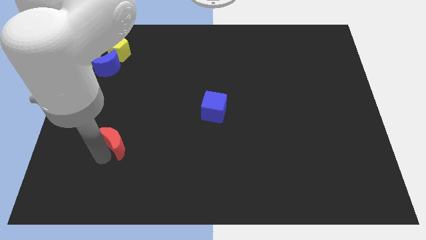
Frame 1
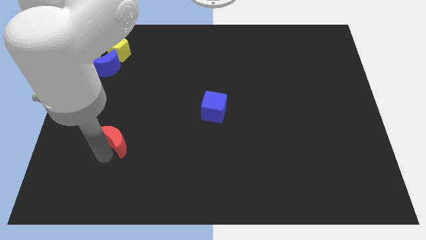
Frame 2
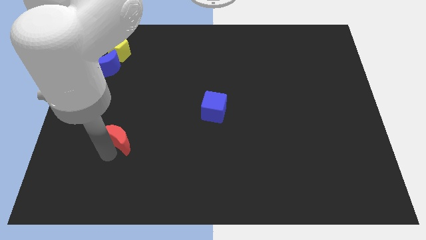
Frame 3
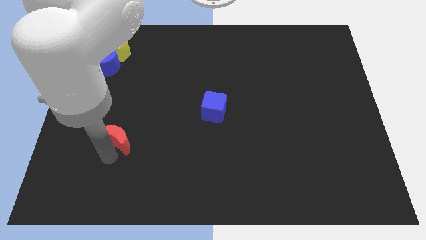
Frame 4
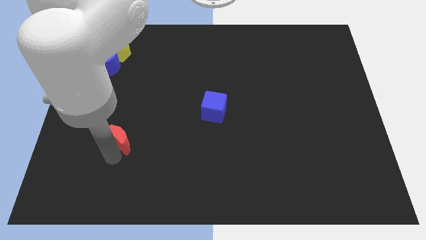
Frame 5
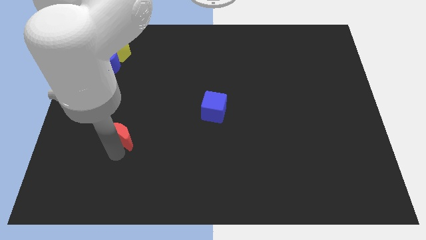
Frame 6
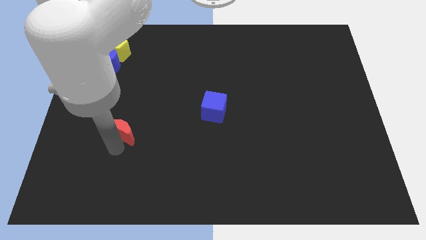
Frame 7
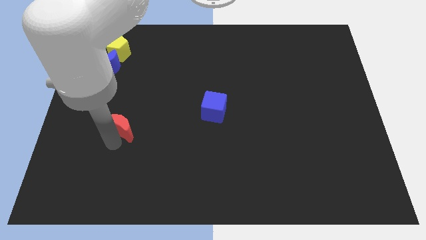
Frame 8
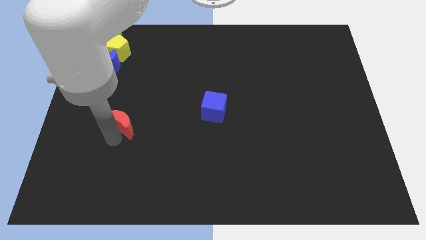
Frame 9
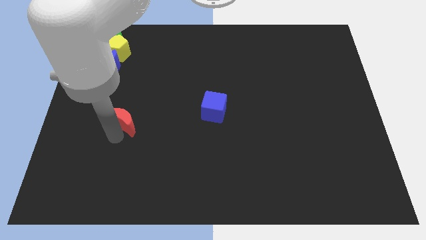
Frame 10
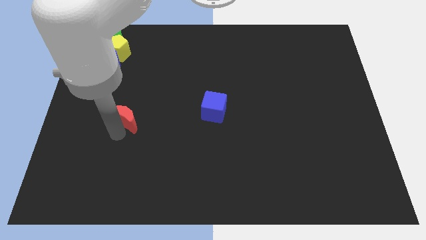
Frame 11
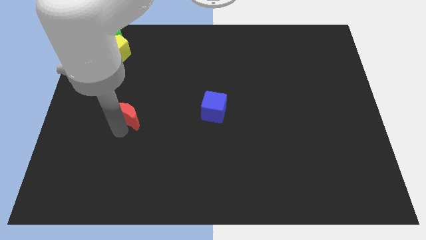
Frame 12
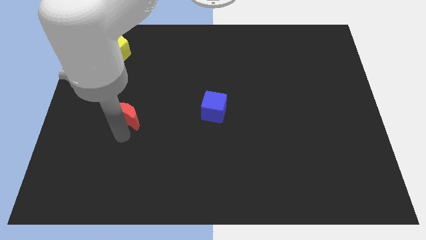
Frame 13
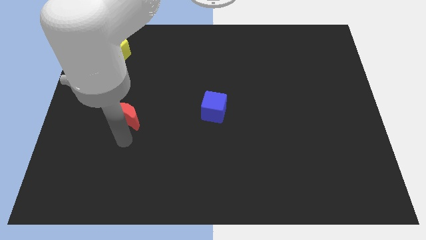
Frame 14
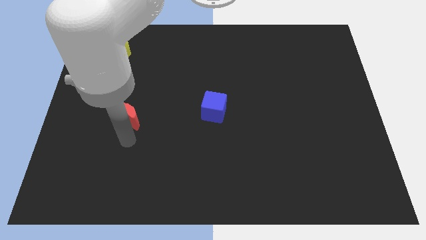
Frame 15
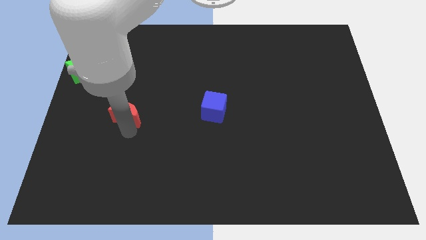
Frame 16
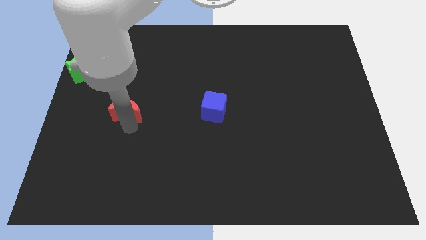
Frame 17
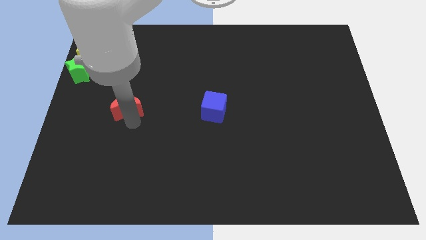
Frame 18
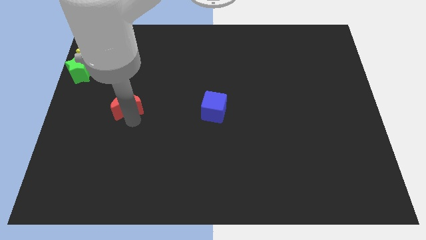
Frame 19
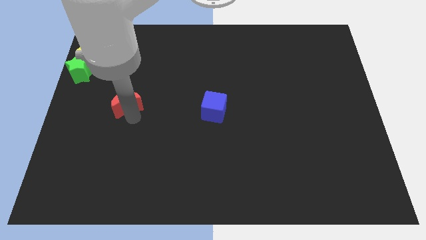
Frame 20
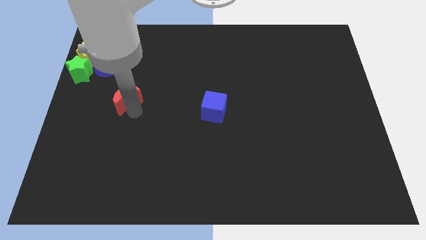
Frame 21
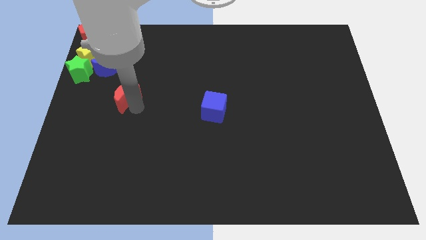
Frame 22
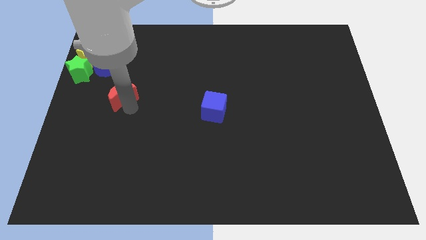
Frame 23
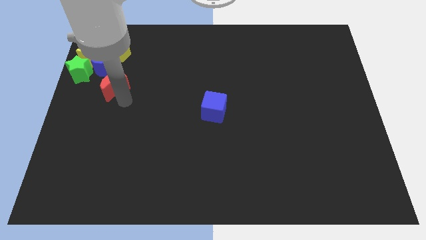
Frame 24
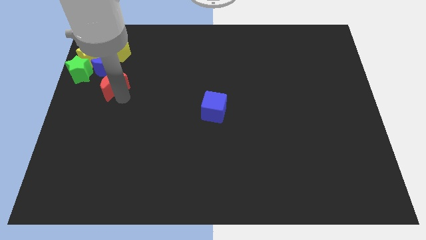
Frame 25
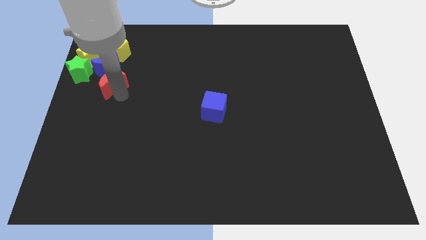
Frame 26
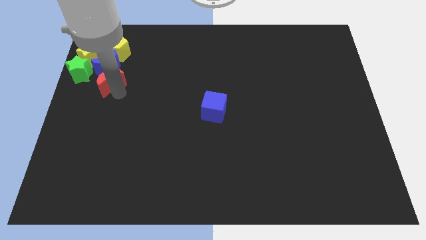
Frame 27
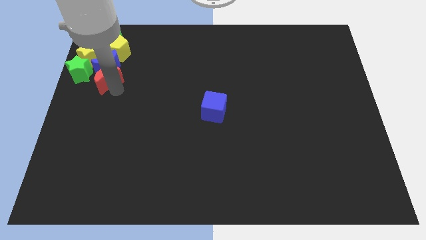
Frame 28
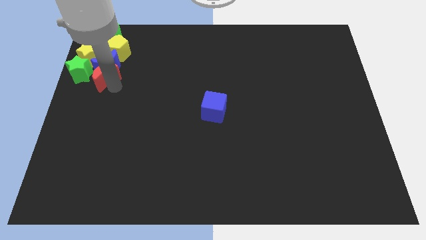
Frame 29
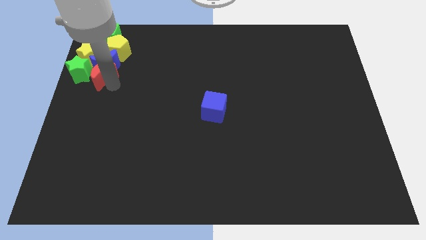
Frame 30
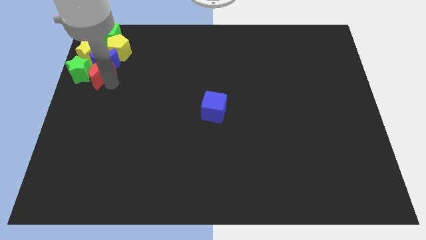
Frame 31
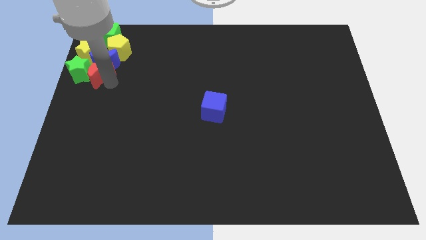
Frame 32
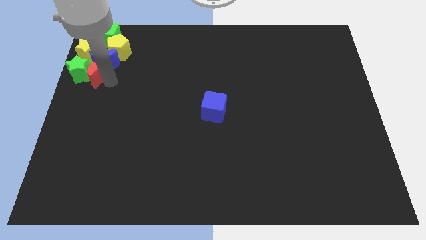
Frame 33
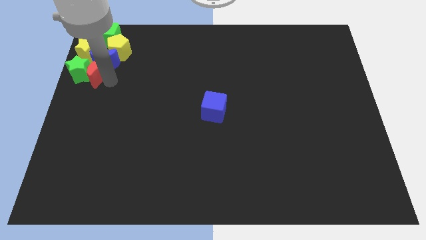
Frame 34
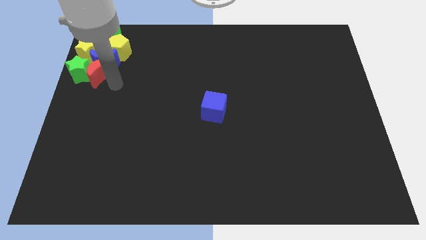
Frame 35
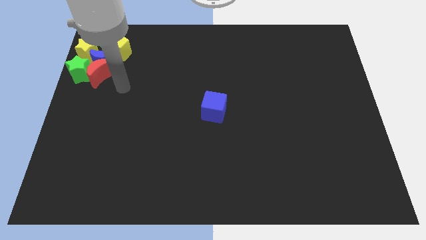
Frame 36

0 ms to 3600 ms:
push red moon into the group of blocks

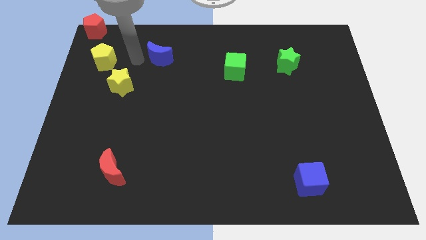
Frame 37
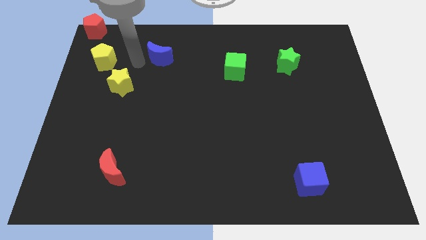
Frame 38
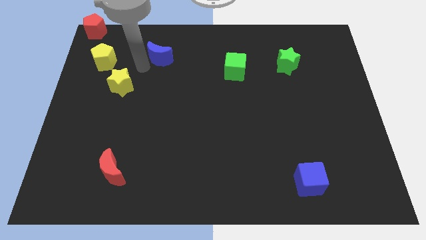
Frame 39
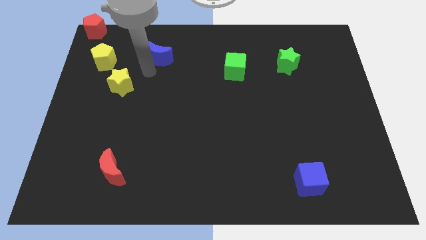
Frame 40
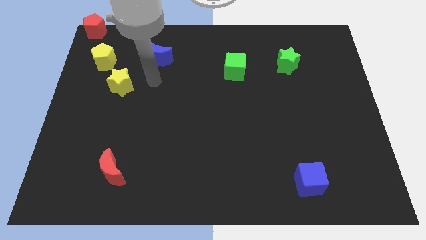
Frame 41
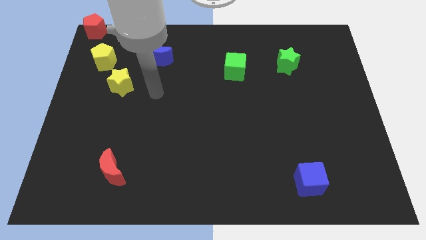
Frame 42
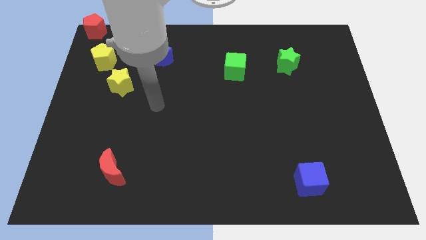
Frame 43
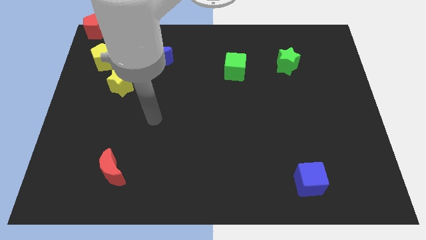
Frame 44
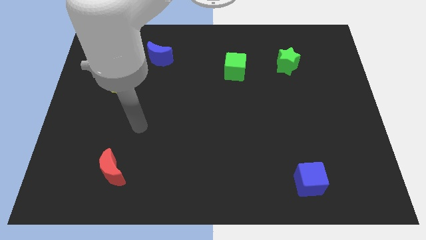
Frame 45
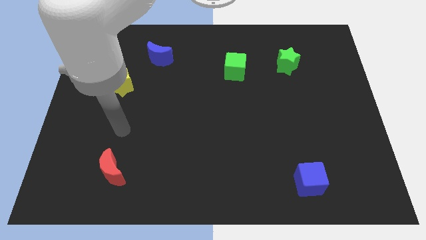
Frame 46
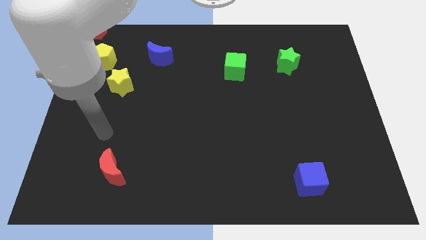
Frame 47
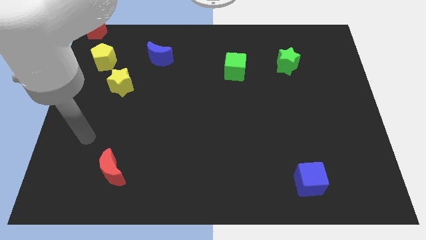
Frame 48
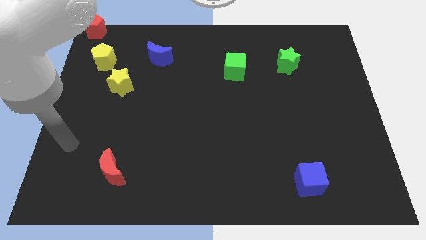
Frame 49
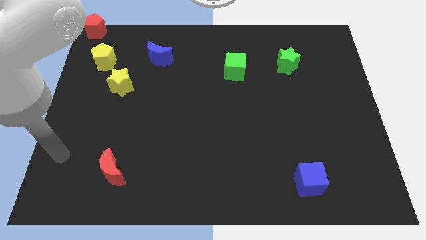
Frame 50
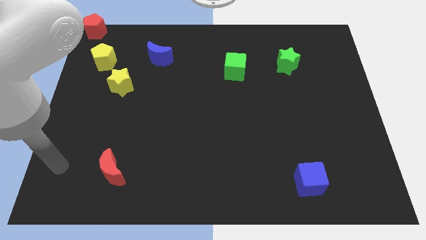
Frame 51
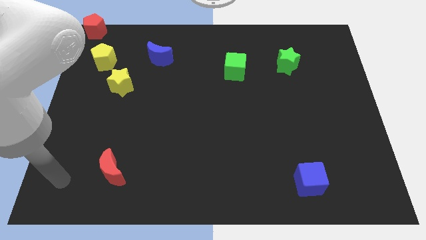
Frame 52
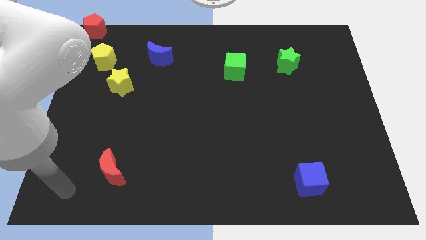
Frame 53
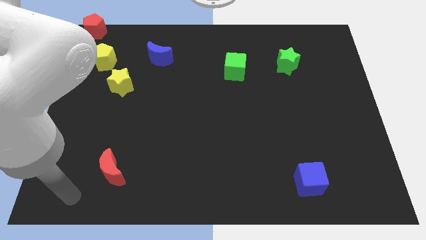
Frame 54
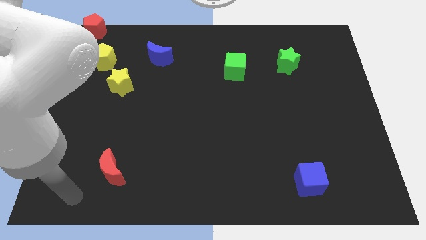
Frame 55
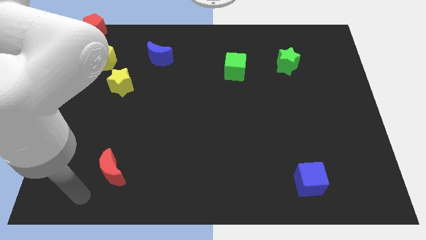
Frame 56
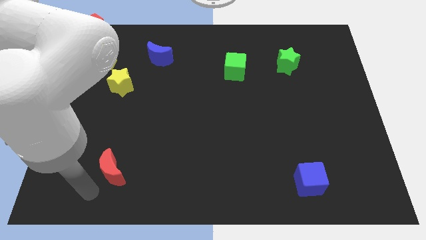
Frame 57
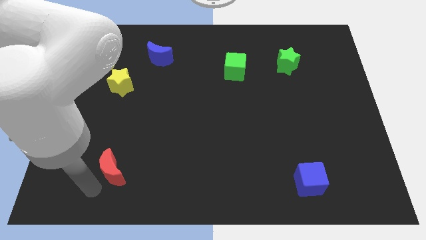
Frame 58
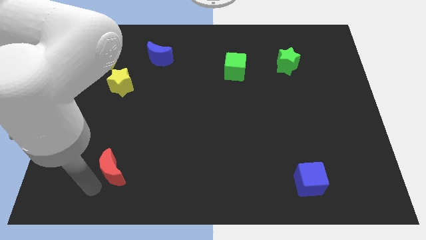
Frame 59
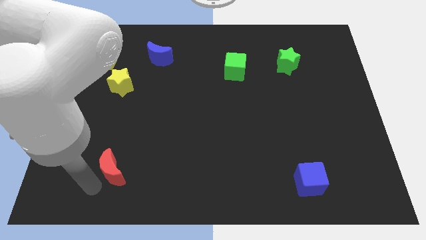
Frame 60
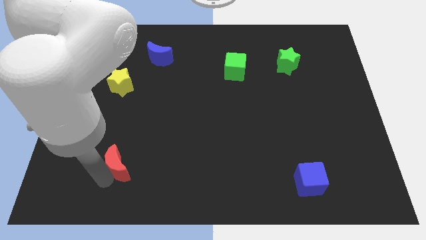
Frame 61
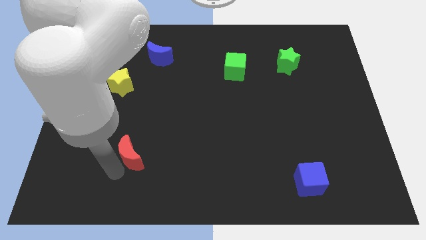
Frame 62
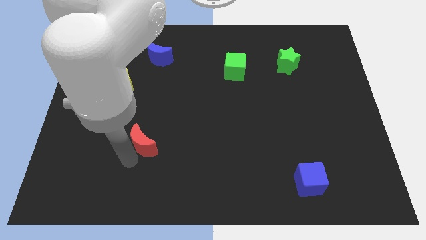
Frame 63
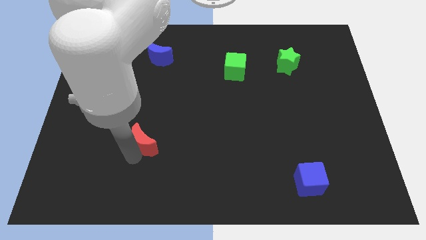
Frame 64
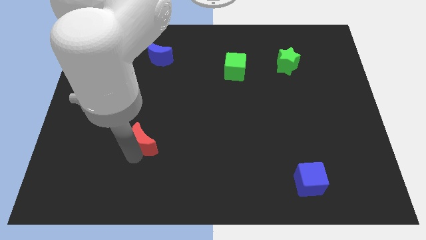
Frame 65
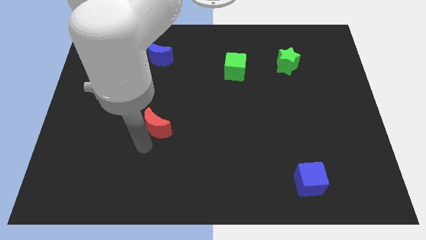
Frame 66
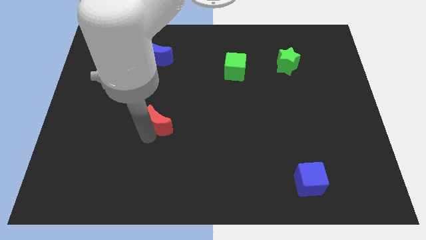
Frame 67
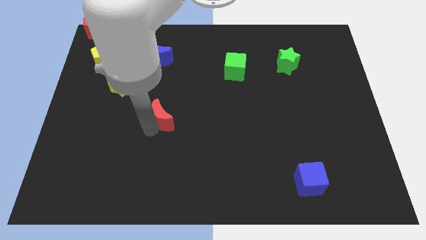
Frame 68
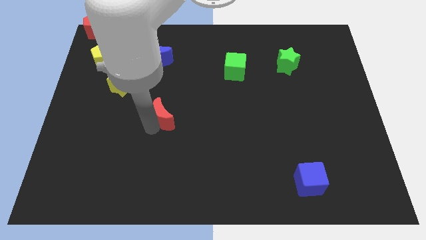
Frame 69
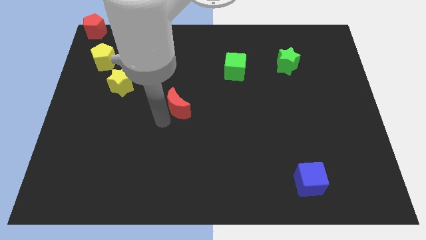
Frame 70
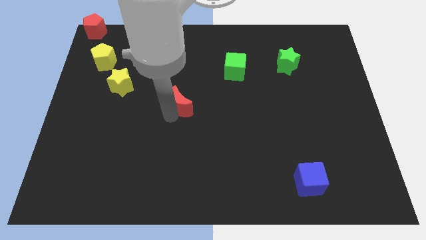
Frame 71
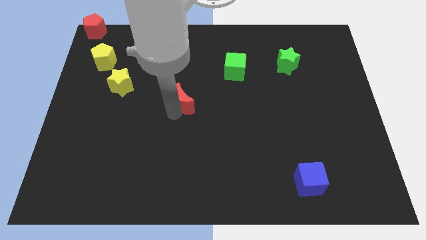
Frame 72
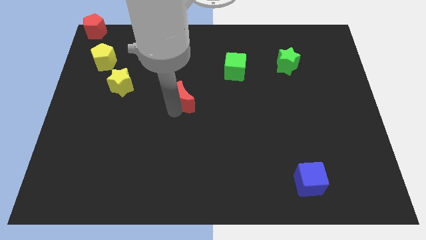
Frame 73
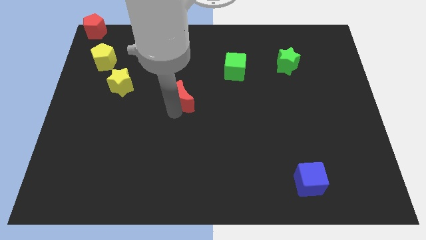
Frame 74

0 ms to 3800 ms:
place the red crescent at the center of the board

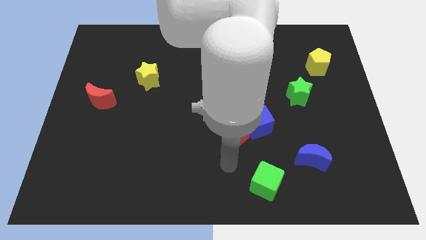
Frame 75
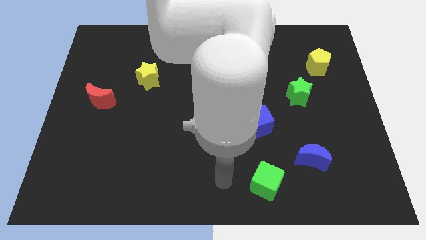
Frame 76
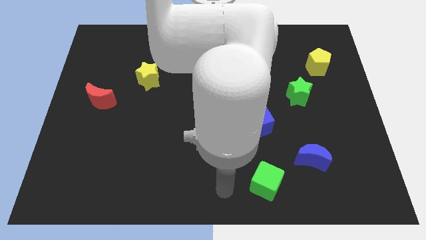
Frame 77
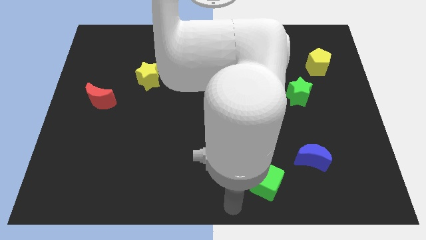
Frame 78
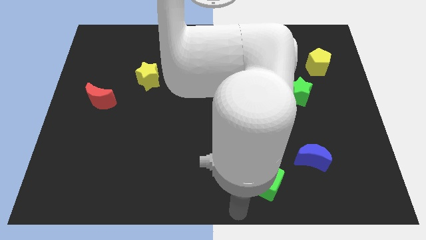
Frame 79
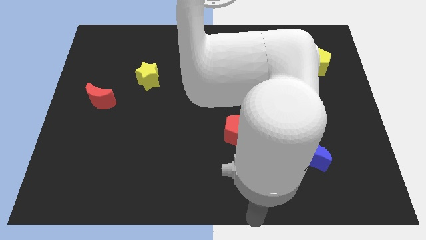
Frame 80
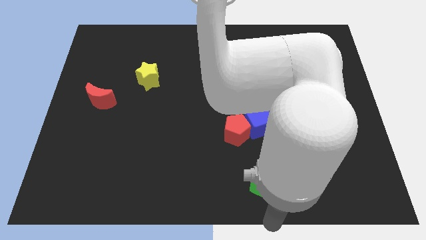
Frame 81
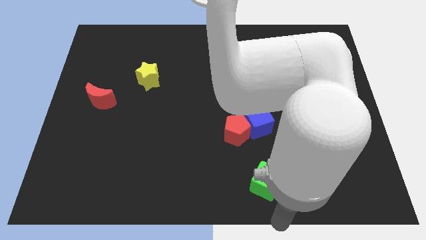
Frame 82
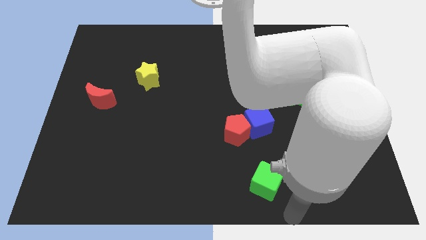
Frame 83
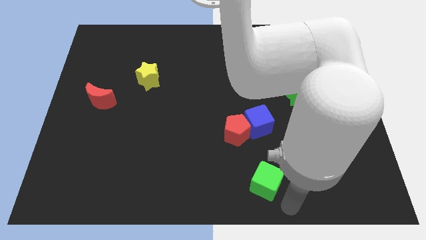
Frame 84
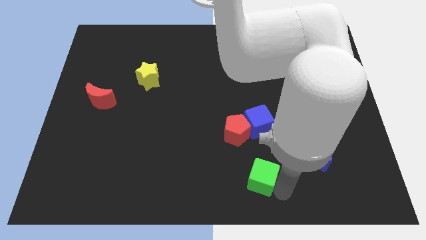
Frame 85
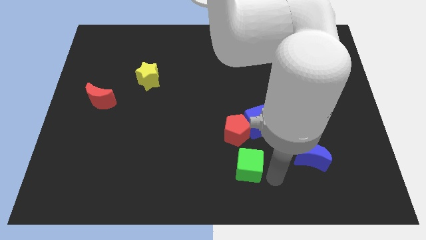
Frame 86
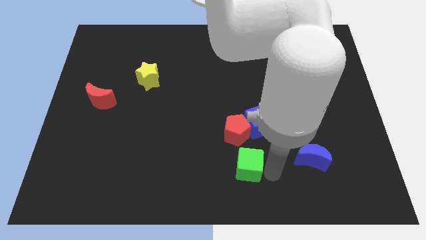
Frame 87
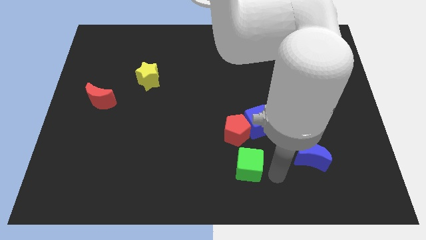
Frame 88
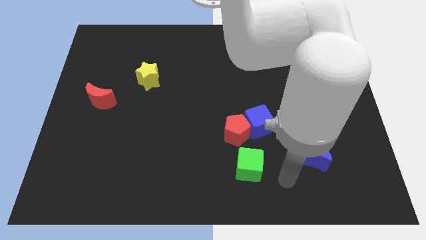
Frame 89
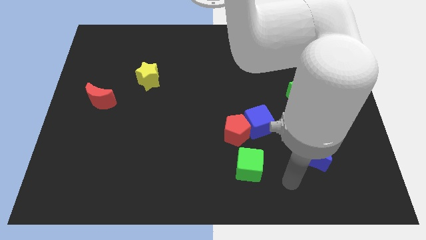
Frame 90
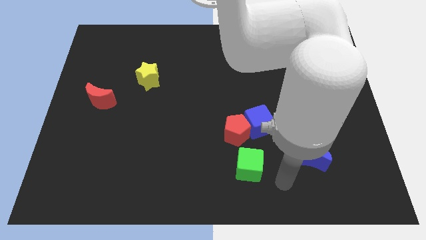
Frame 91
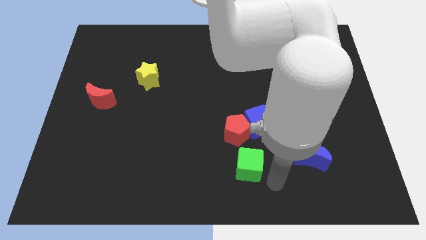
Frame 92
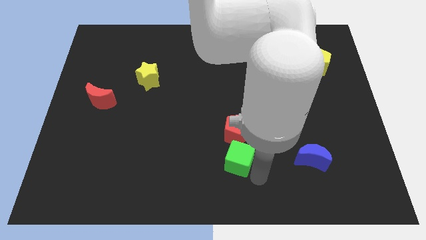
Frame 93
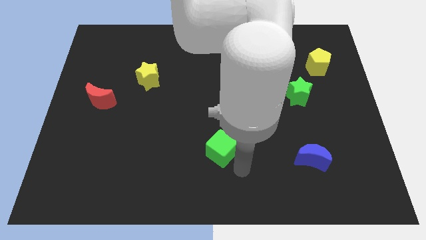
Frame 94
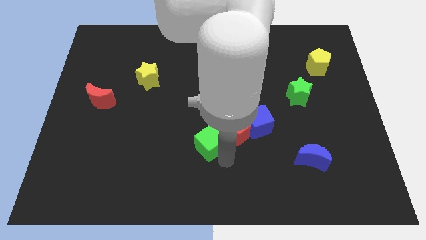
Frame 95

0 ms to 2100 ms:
move green cube left below the red pentagon
